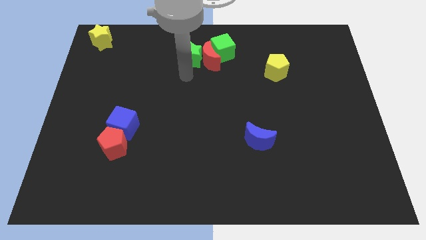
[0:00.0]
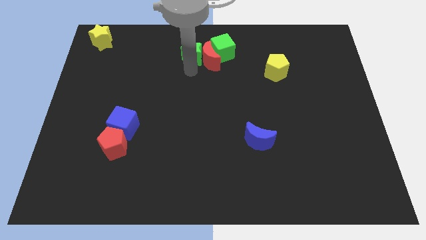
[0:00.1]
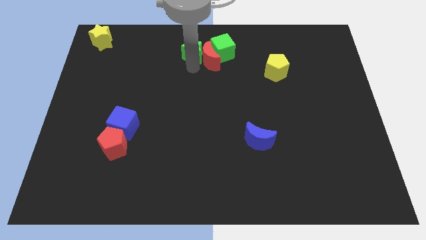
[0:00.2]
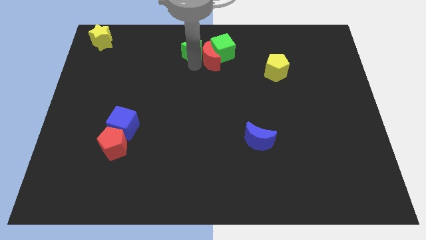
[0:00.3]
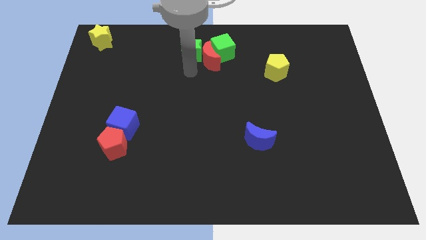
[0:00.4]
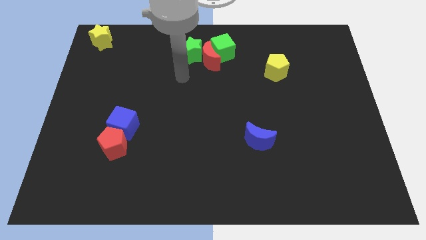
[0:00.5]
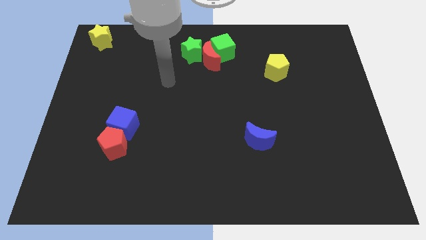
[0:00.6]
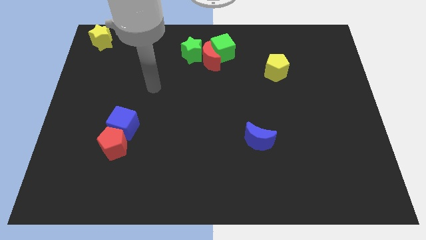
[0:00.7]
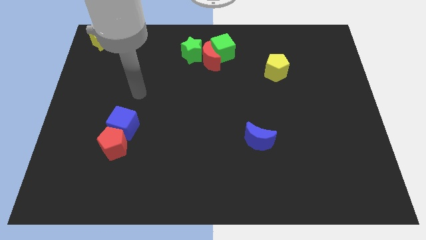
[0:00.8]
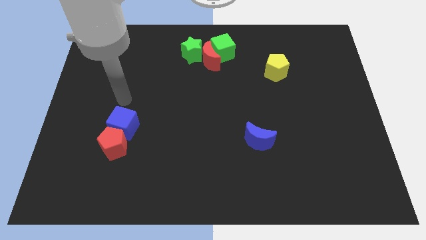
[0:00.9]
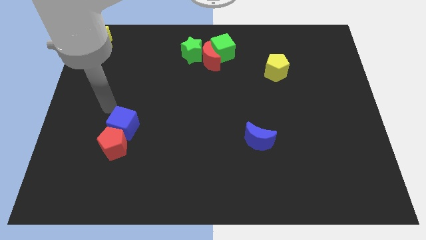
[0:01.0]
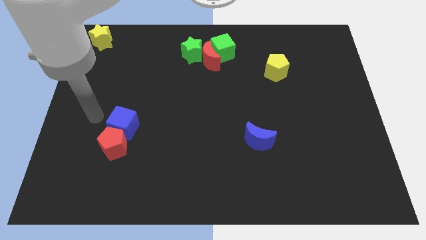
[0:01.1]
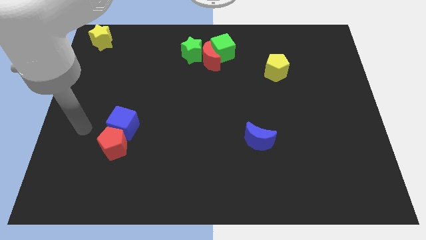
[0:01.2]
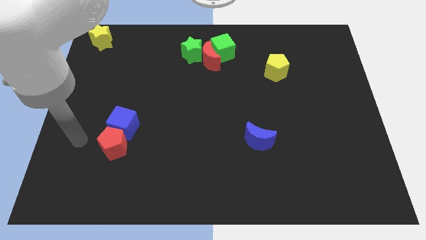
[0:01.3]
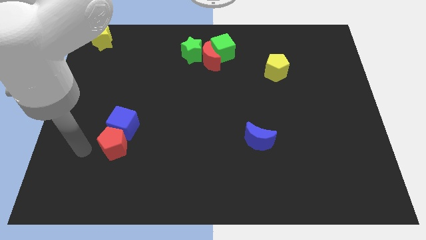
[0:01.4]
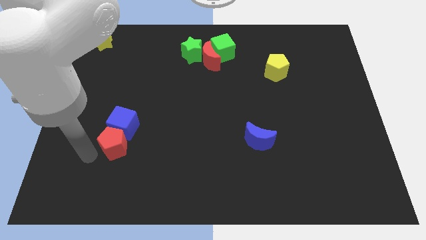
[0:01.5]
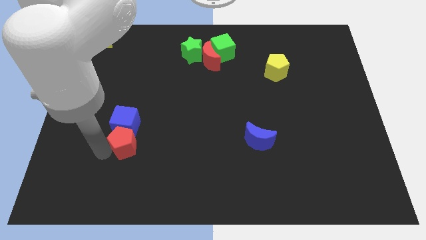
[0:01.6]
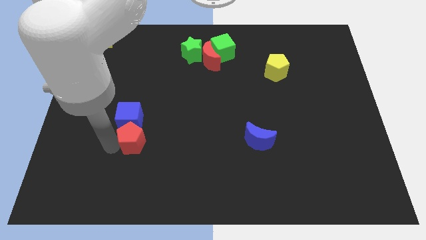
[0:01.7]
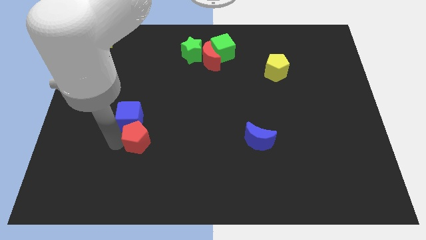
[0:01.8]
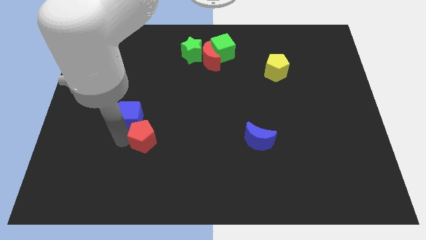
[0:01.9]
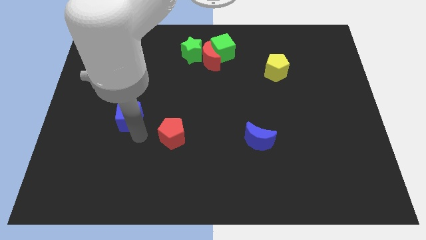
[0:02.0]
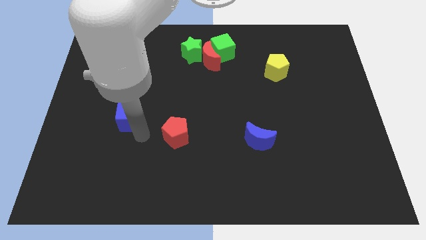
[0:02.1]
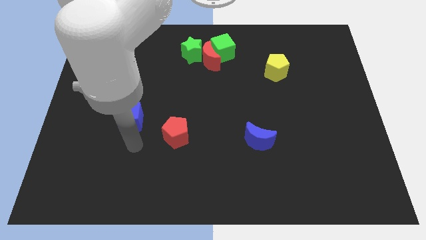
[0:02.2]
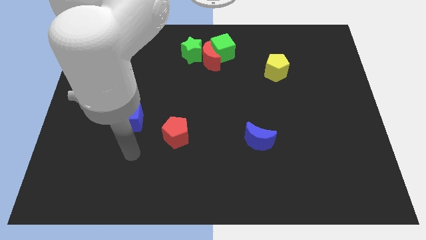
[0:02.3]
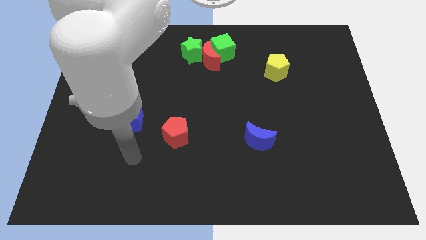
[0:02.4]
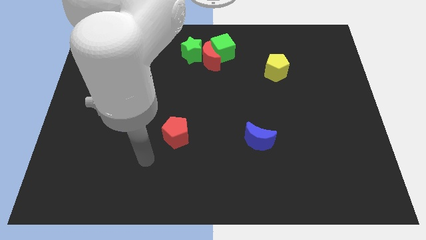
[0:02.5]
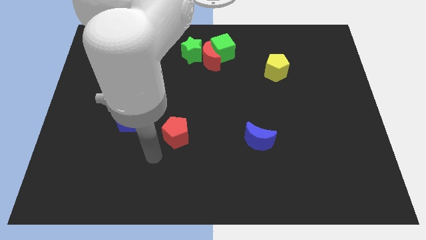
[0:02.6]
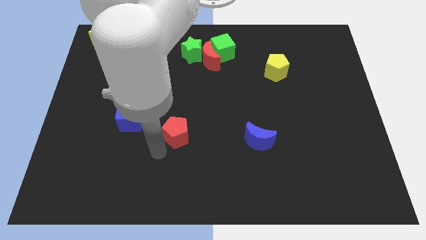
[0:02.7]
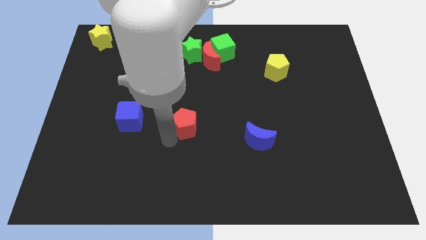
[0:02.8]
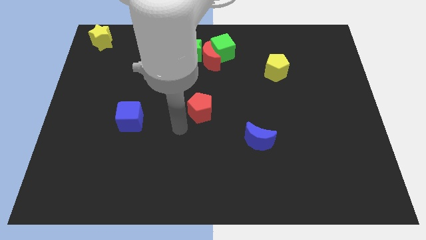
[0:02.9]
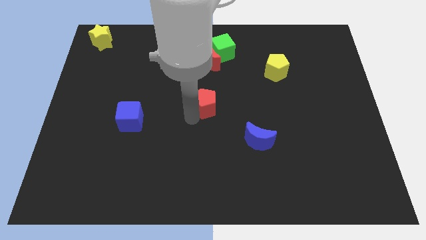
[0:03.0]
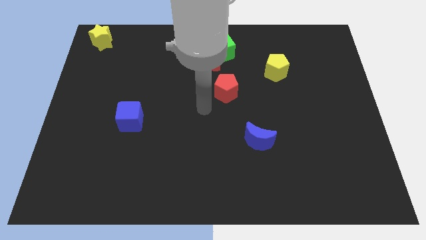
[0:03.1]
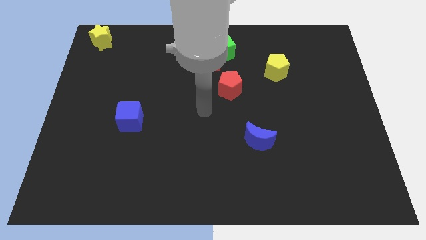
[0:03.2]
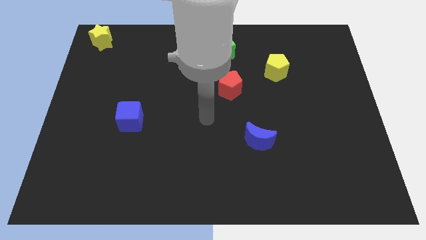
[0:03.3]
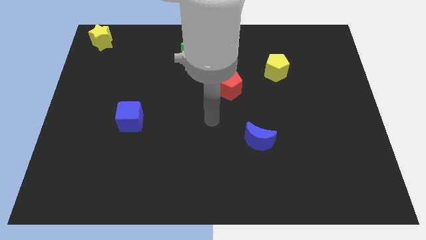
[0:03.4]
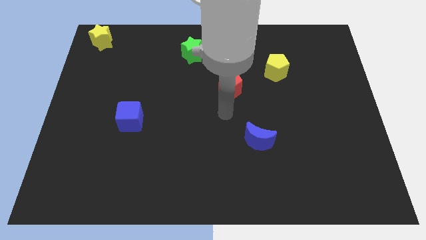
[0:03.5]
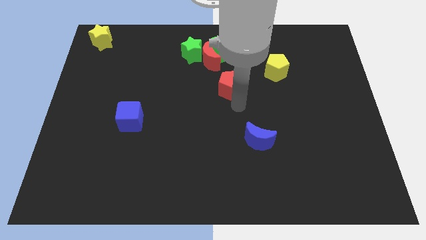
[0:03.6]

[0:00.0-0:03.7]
separate the red pentagon and the blue cube

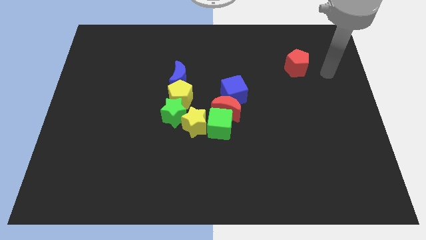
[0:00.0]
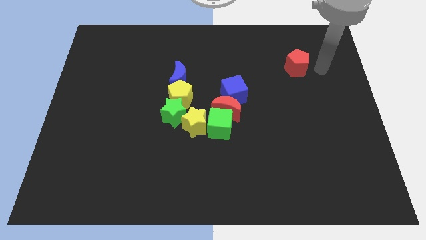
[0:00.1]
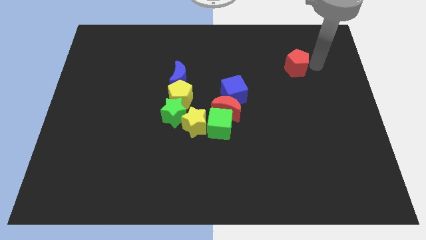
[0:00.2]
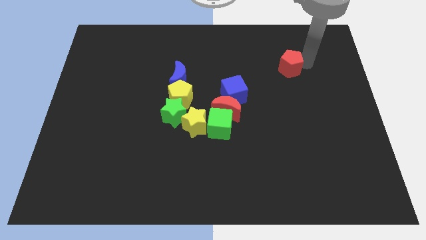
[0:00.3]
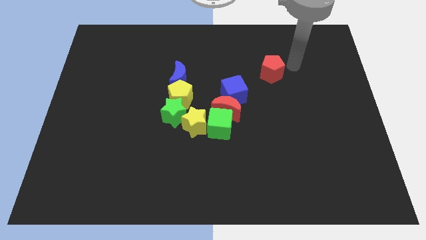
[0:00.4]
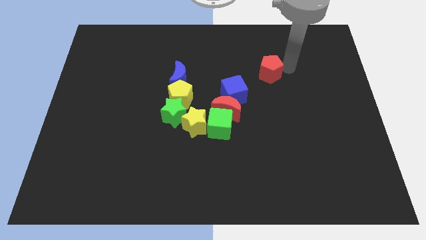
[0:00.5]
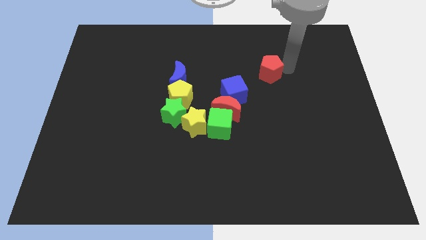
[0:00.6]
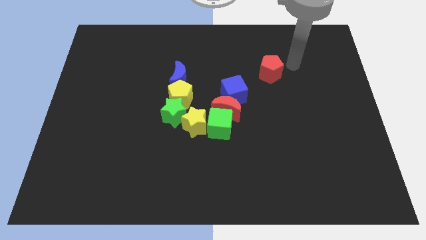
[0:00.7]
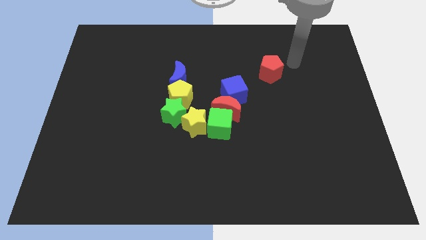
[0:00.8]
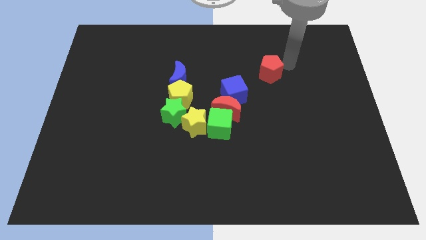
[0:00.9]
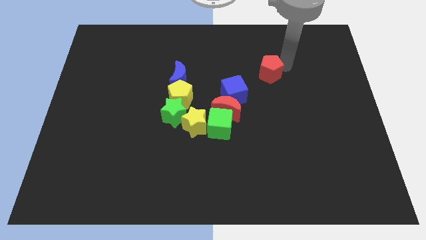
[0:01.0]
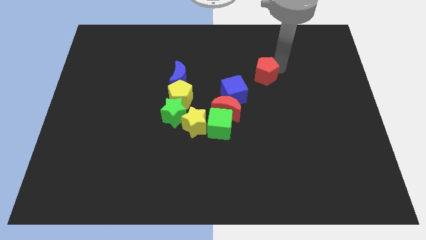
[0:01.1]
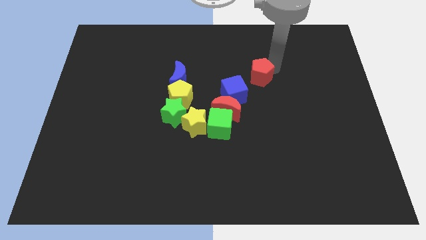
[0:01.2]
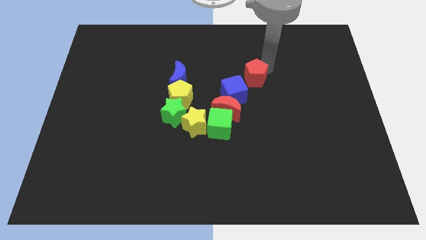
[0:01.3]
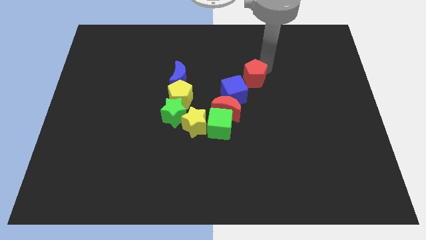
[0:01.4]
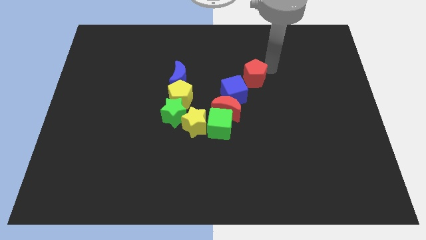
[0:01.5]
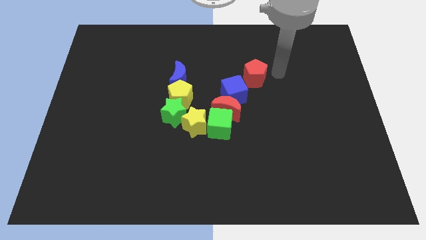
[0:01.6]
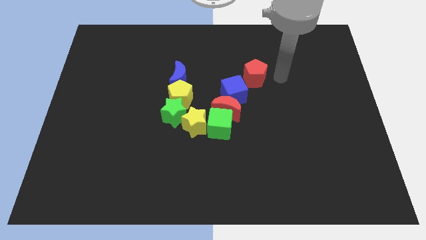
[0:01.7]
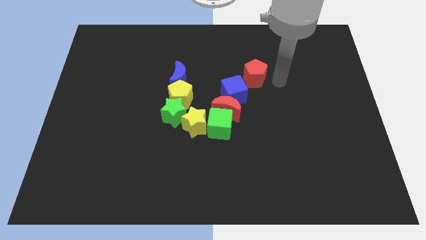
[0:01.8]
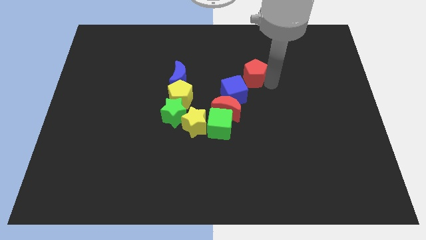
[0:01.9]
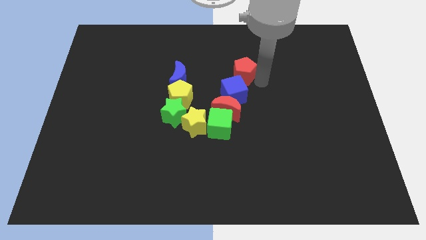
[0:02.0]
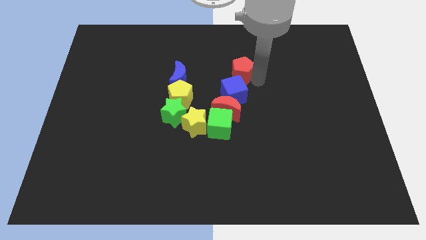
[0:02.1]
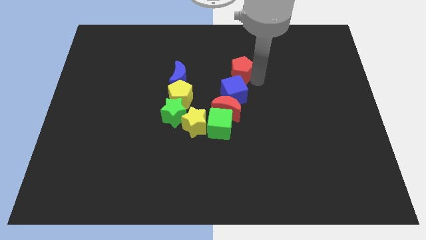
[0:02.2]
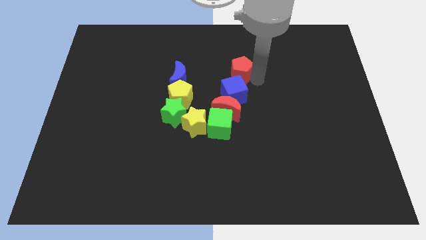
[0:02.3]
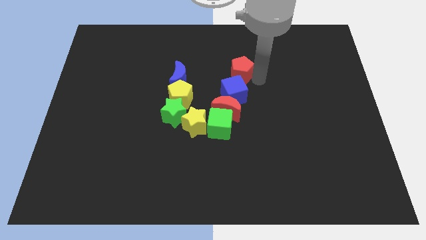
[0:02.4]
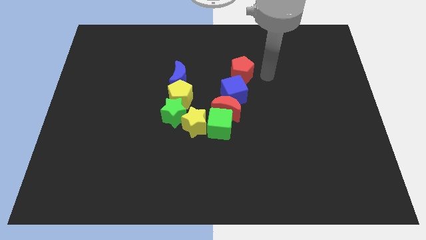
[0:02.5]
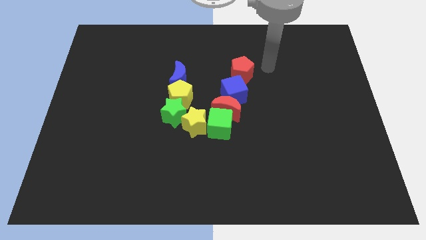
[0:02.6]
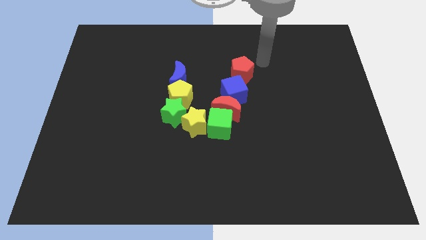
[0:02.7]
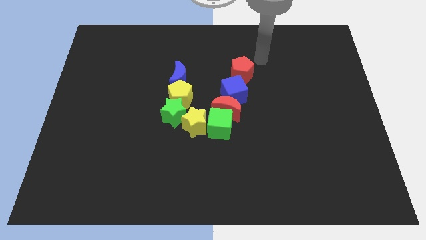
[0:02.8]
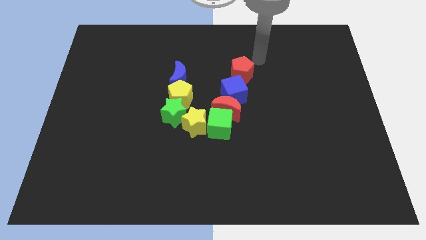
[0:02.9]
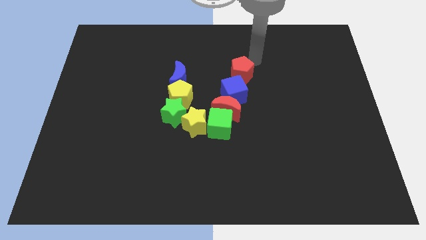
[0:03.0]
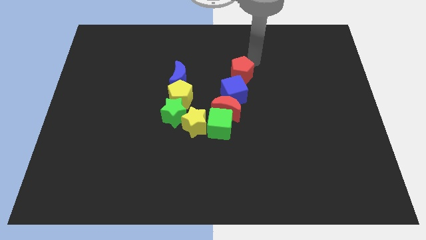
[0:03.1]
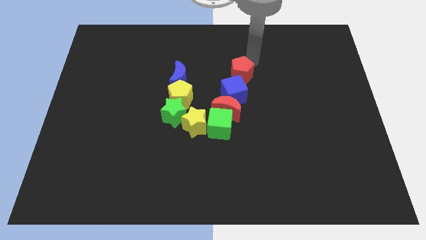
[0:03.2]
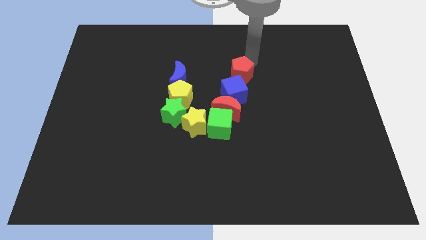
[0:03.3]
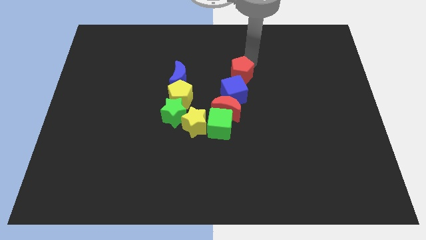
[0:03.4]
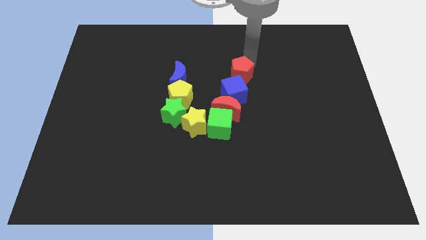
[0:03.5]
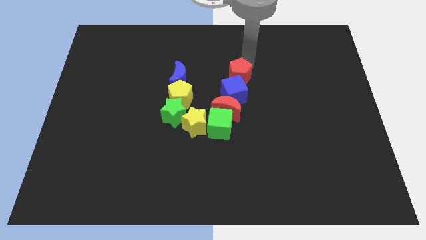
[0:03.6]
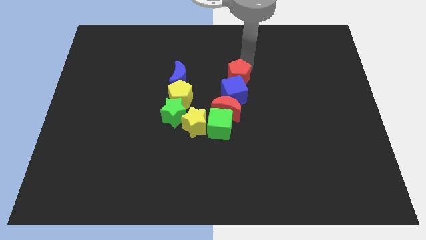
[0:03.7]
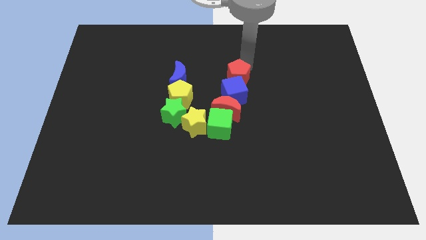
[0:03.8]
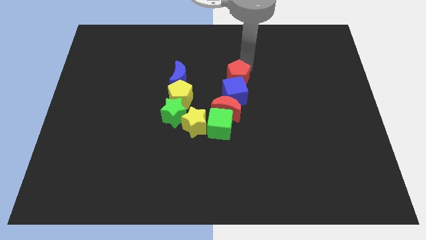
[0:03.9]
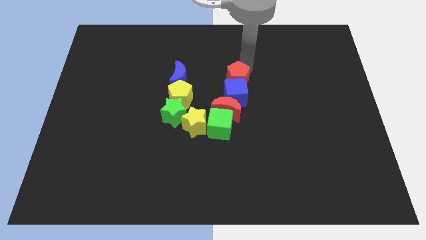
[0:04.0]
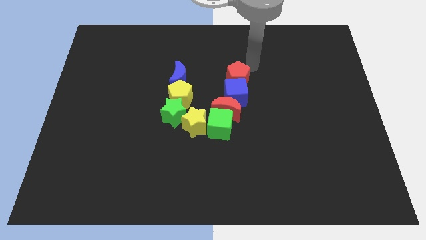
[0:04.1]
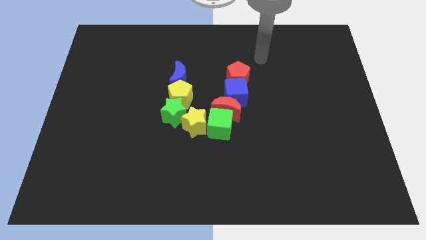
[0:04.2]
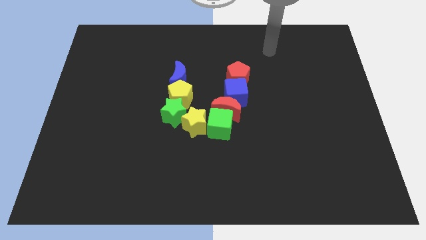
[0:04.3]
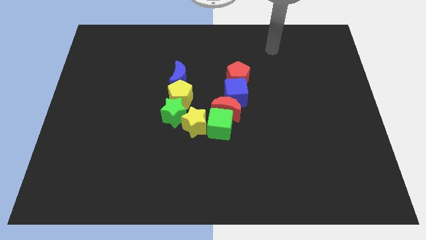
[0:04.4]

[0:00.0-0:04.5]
move the red pentagon above to the blue cube

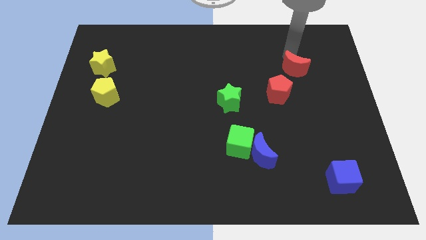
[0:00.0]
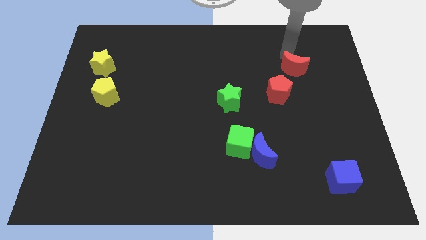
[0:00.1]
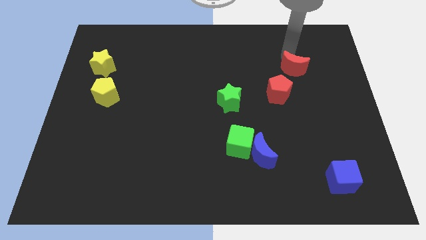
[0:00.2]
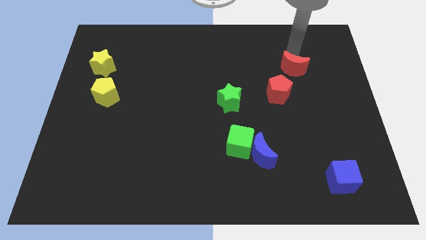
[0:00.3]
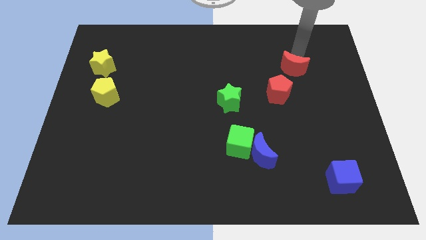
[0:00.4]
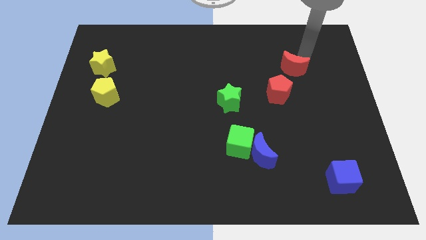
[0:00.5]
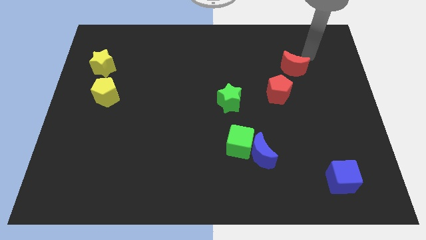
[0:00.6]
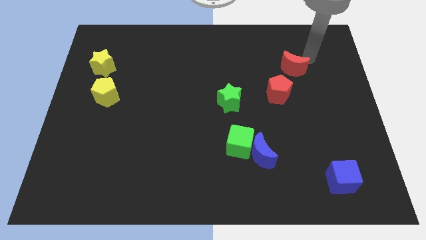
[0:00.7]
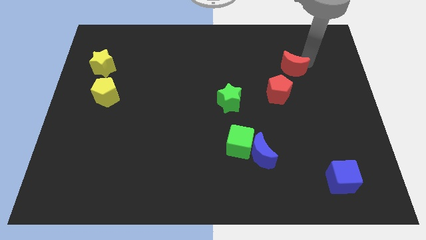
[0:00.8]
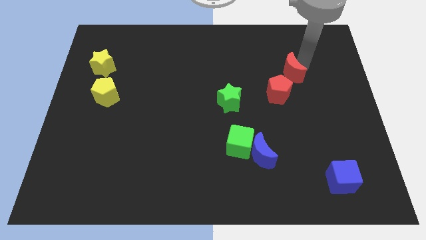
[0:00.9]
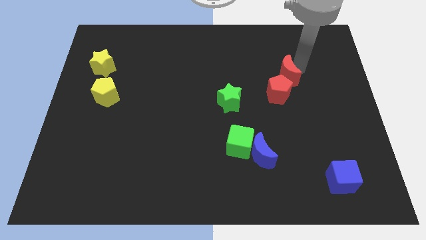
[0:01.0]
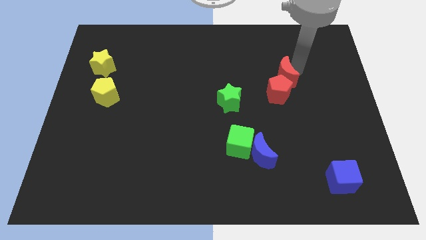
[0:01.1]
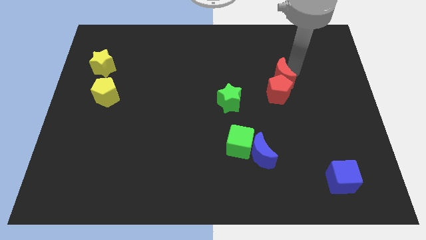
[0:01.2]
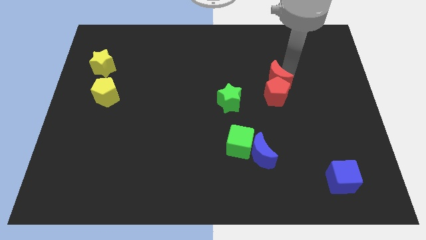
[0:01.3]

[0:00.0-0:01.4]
move the red moon into the red pentagon
